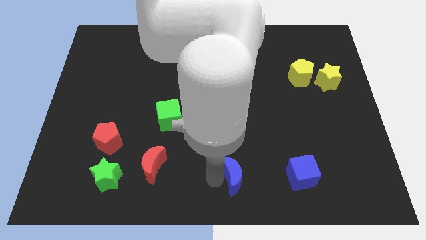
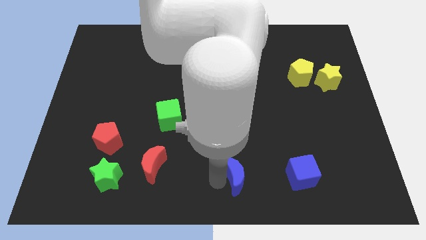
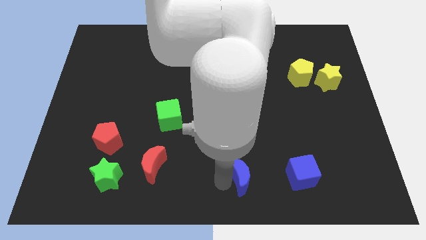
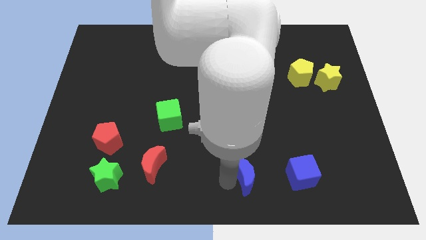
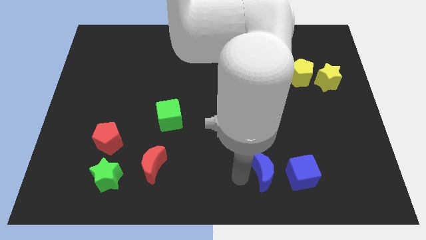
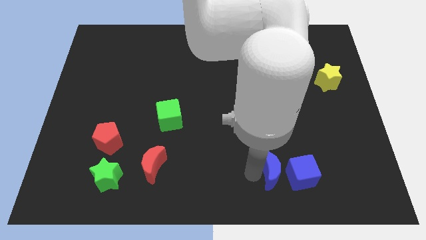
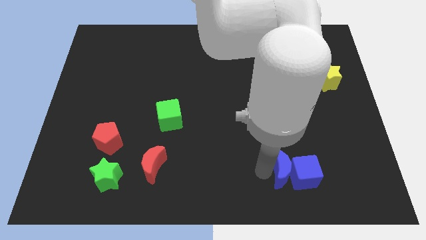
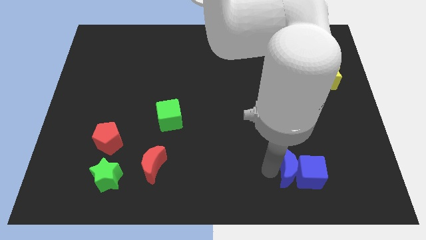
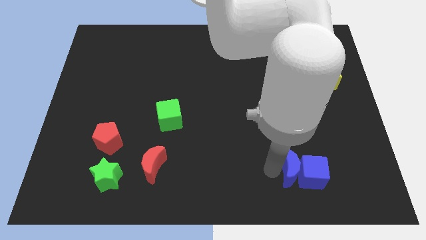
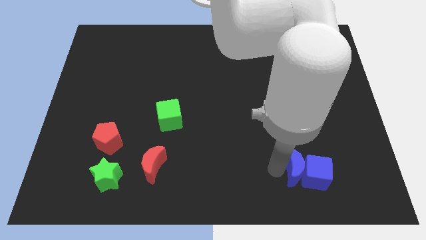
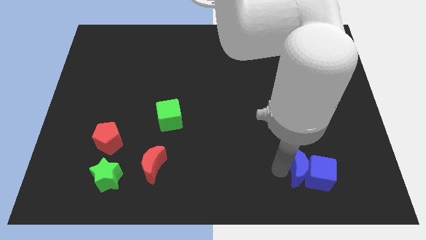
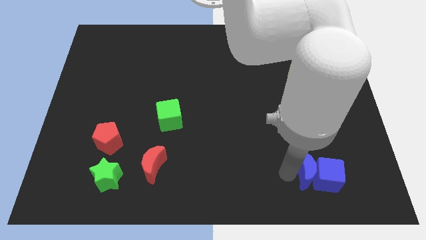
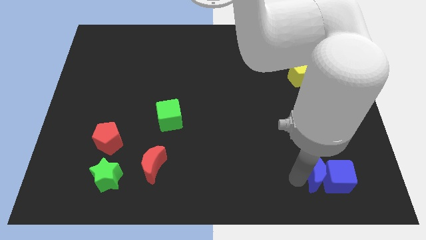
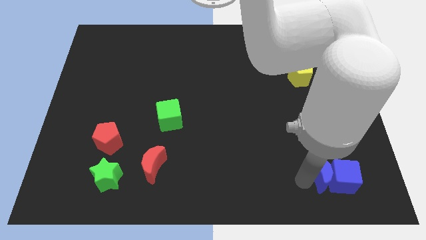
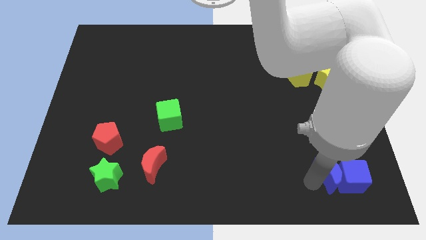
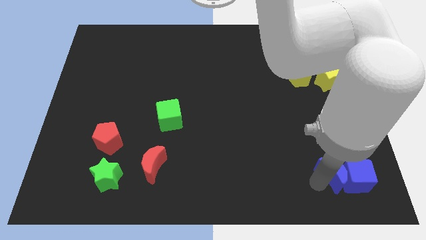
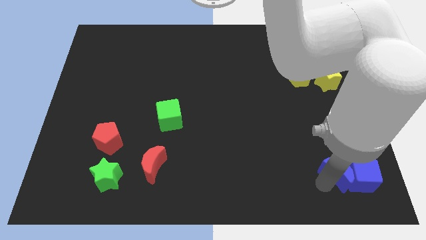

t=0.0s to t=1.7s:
push the blue moon into the blue cube

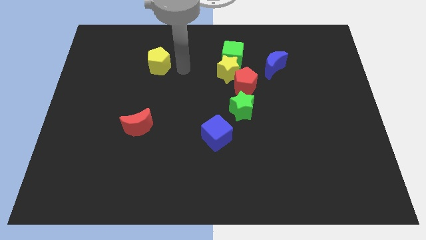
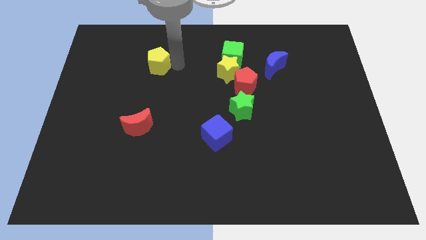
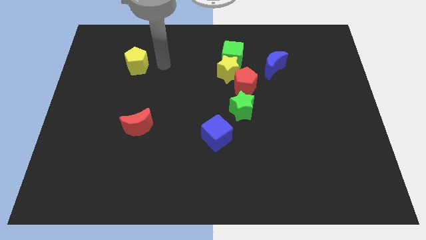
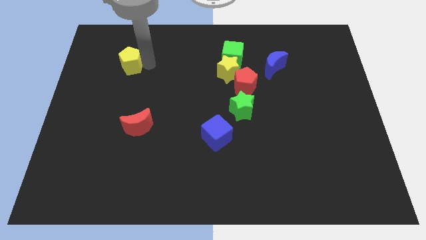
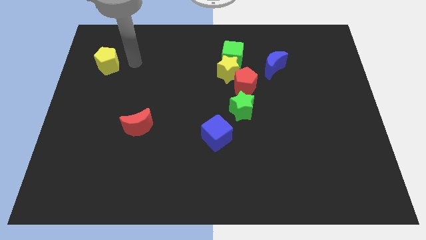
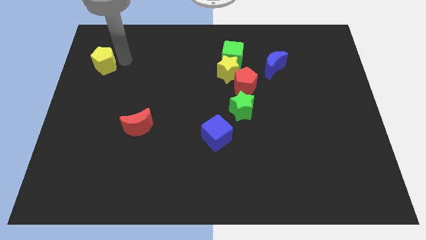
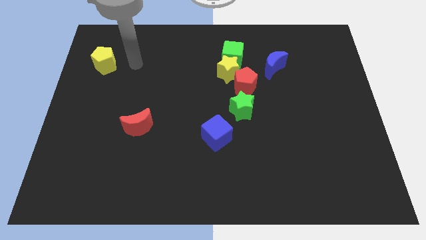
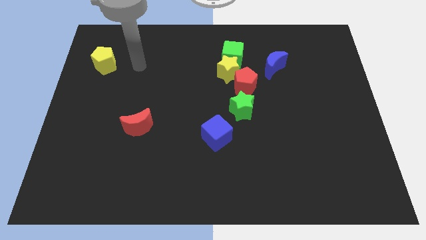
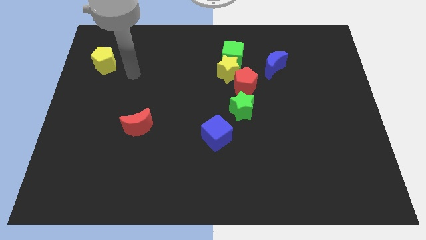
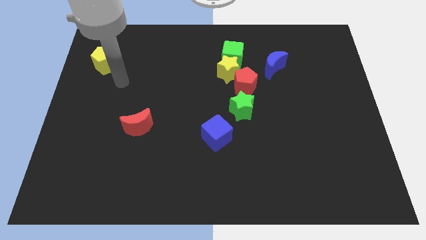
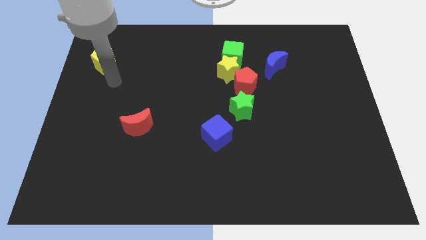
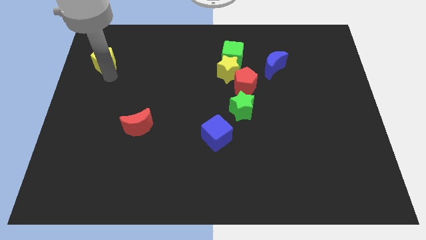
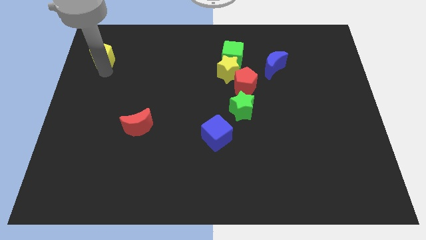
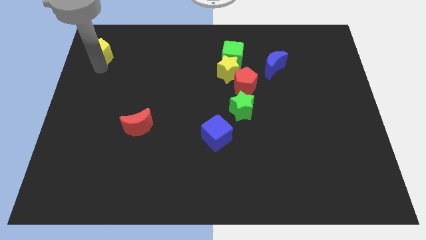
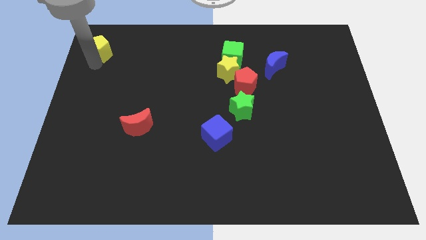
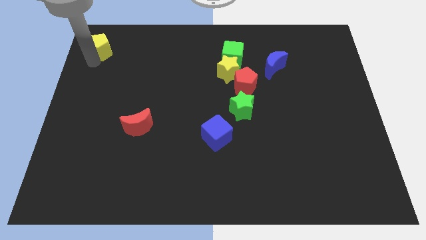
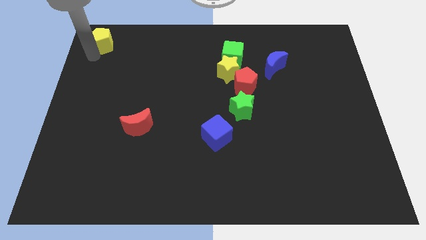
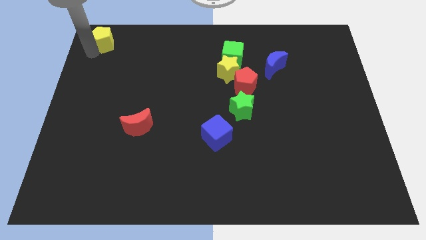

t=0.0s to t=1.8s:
place the yellow pentagon diagonally to the red moon

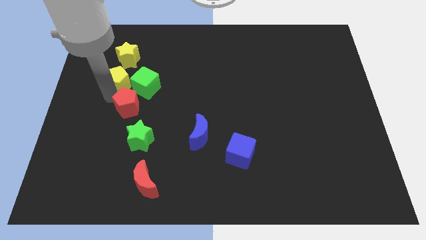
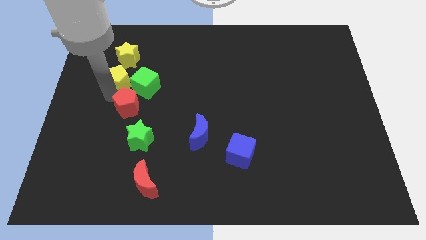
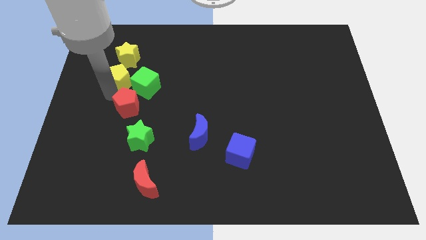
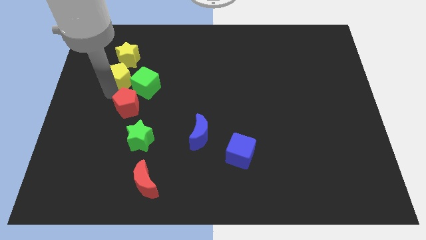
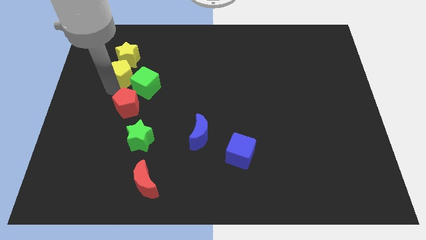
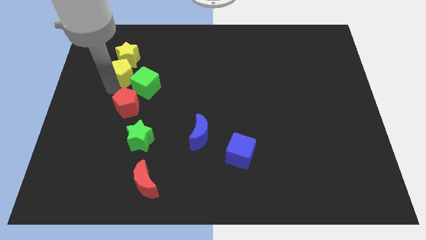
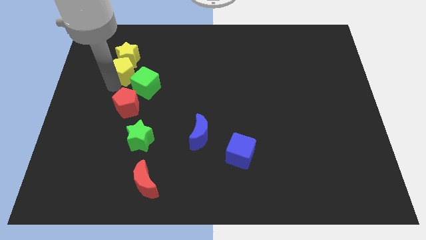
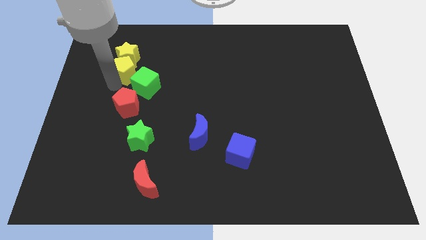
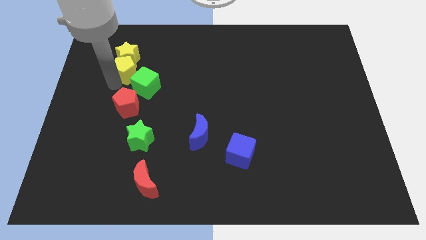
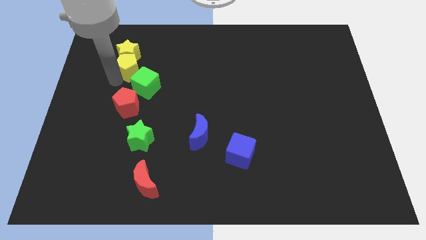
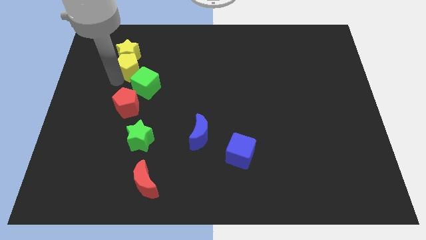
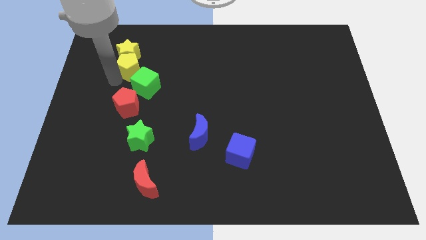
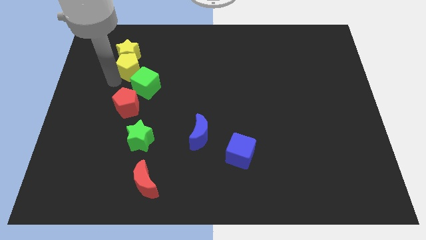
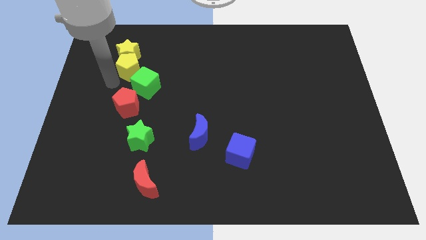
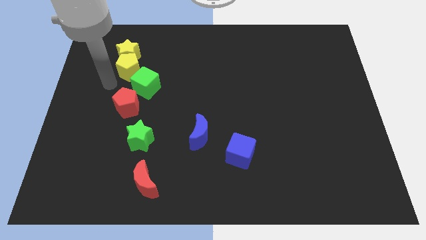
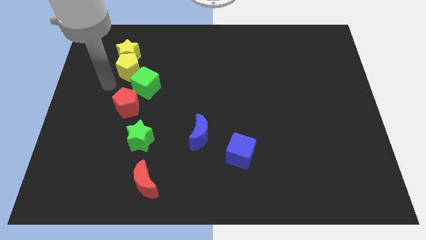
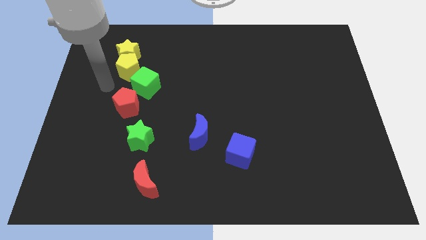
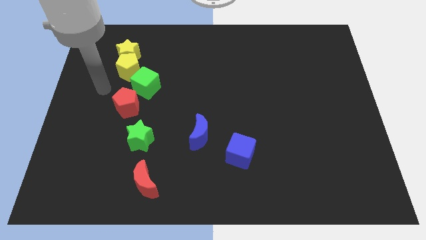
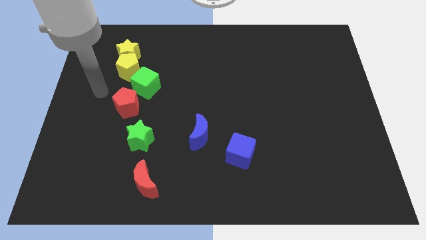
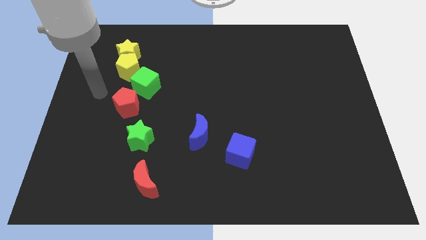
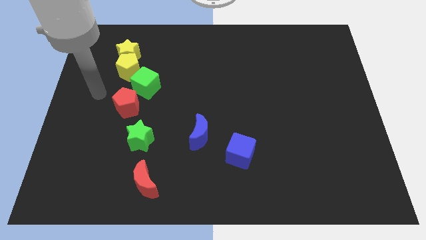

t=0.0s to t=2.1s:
move the yellow pentagon below the yellow star

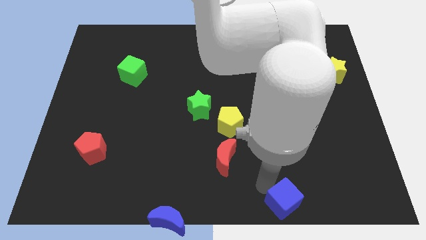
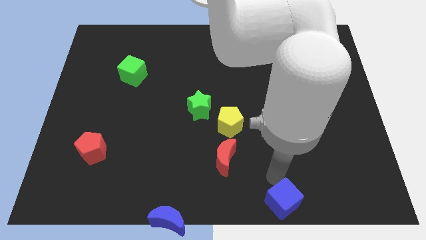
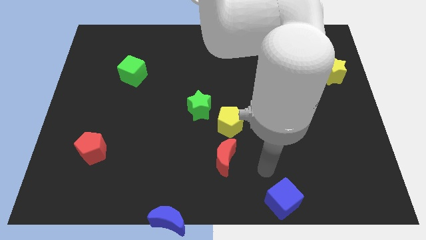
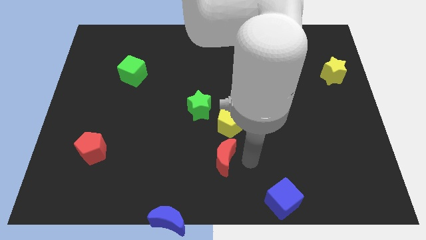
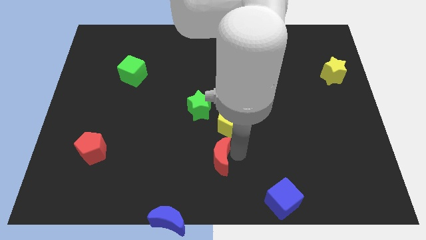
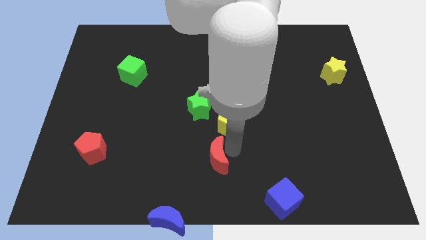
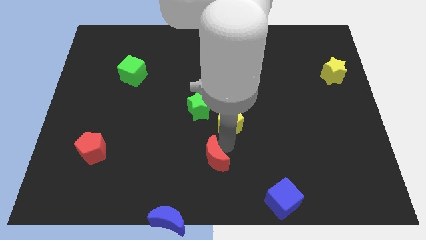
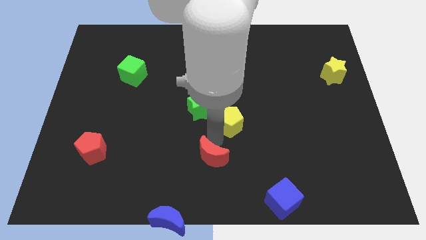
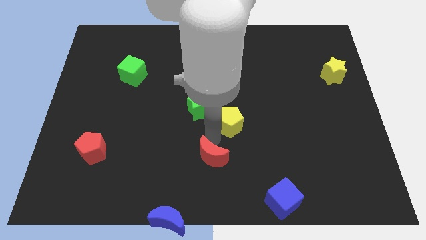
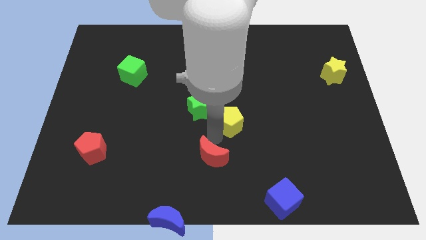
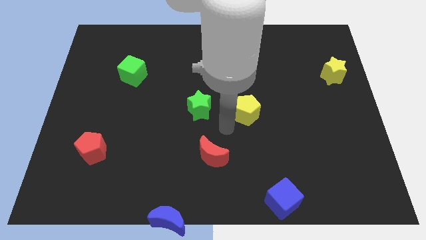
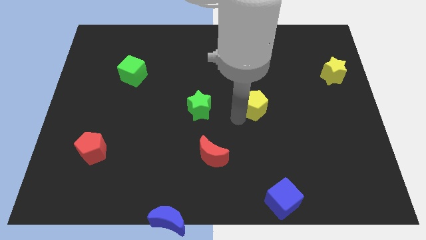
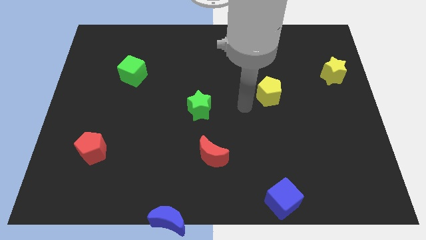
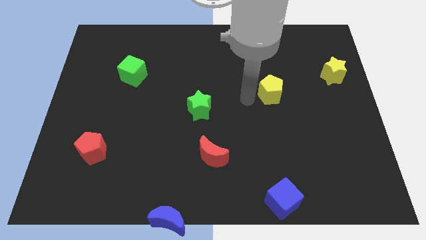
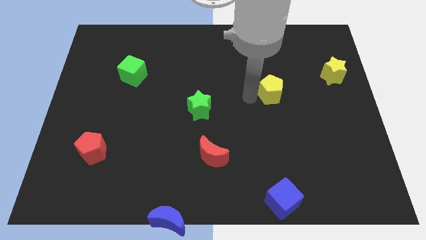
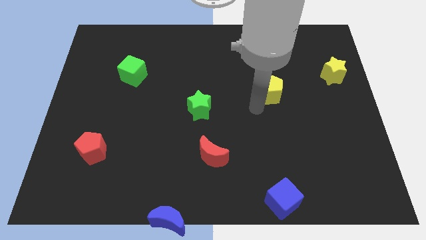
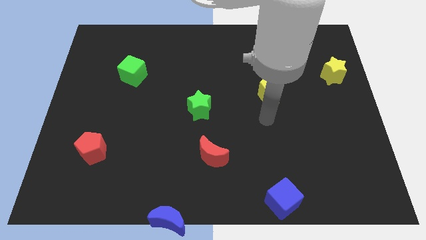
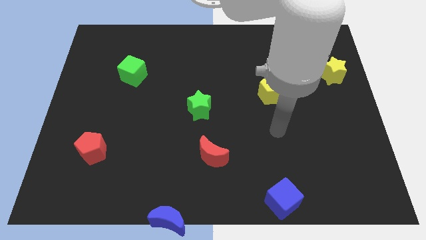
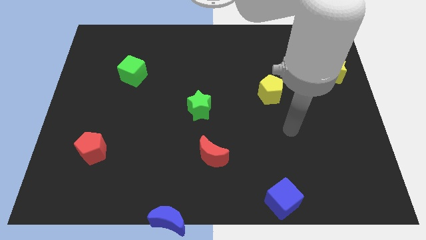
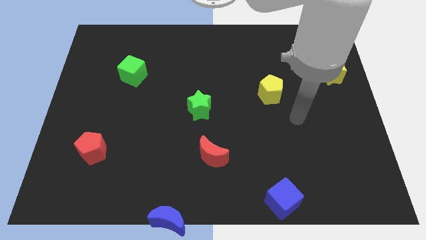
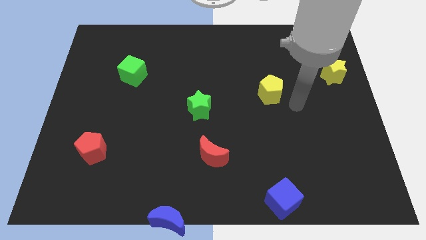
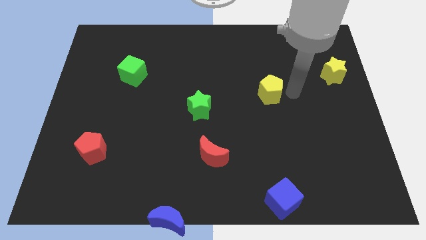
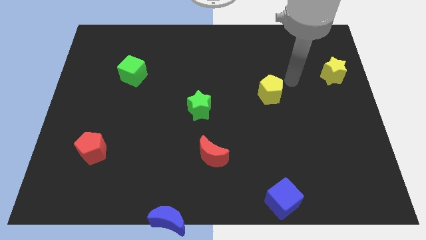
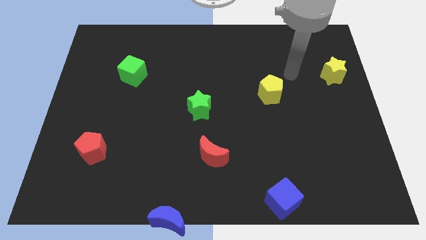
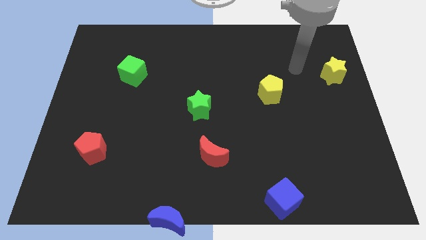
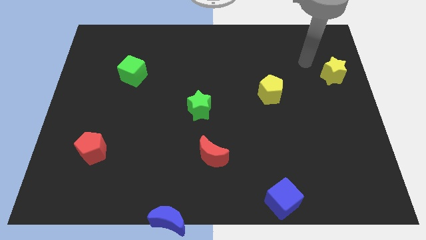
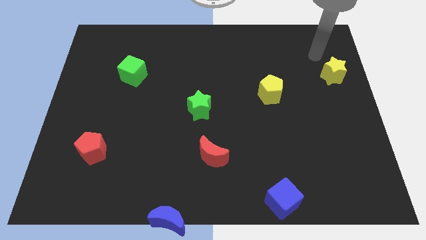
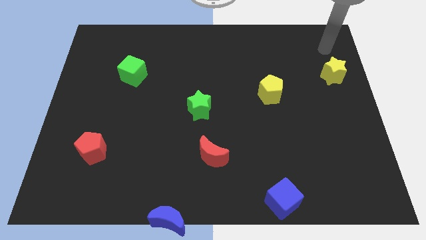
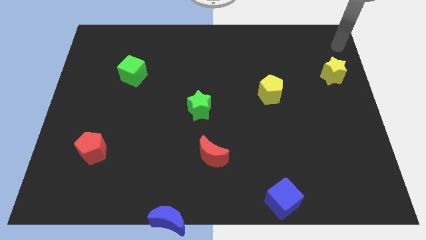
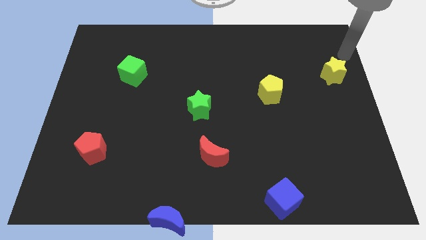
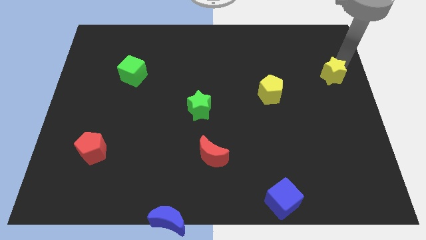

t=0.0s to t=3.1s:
separate the yellow pentagon from the green star and the red moon

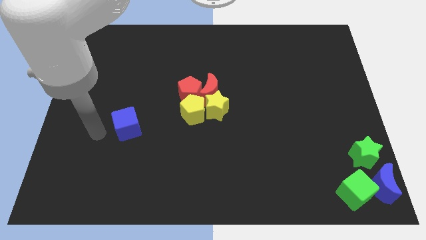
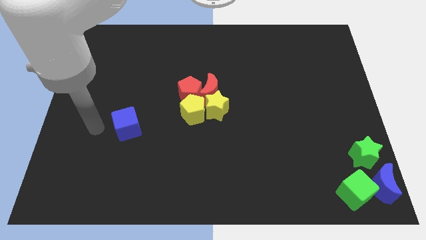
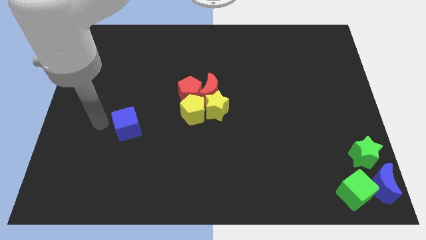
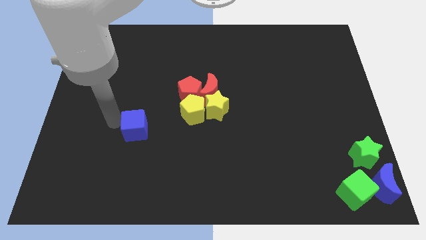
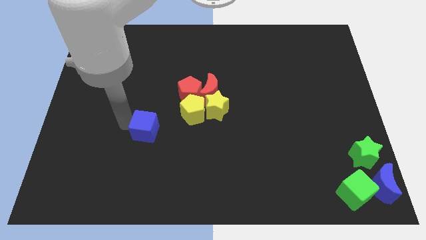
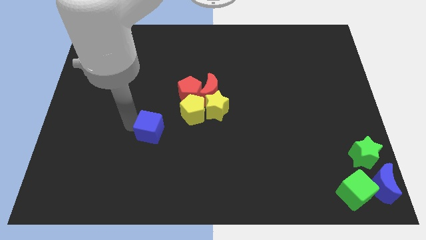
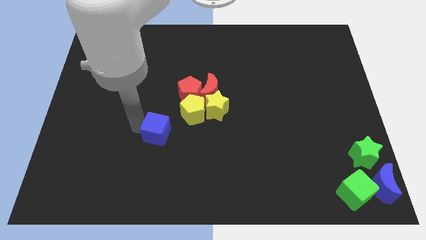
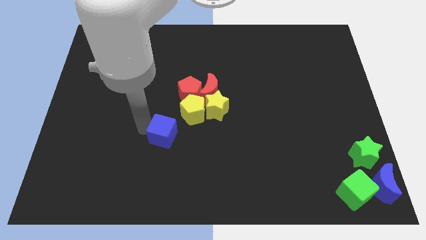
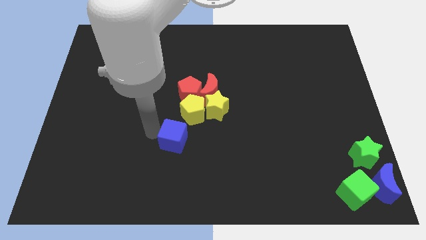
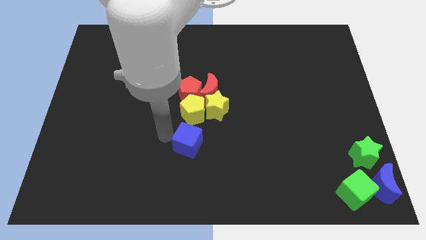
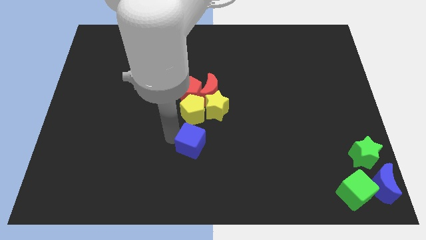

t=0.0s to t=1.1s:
push blue cube below yellow pentagon
